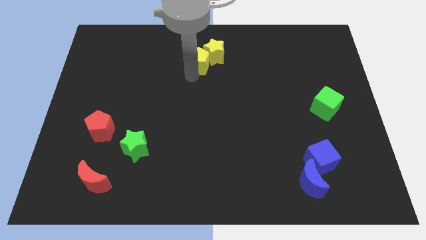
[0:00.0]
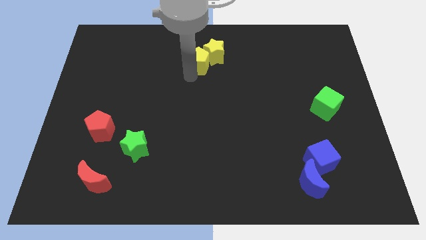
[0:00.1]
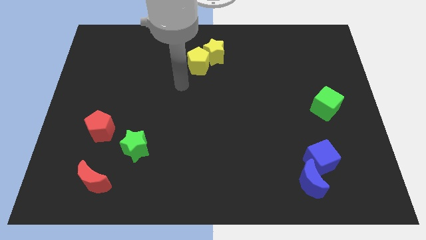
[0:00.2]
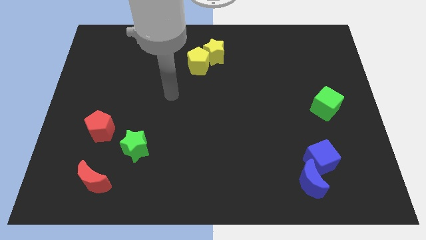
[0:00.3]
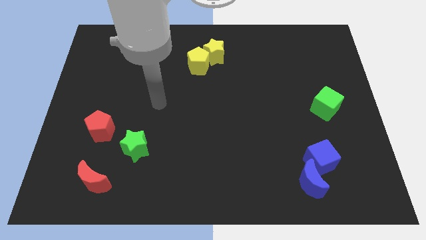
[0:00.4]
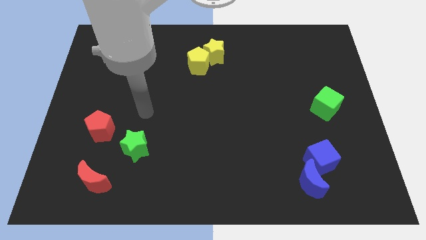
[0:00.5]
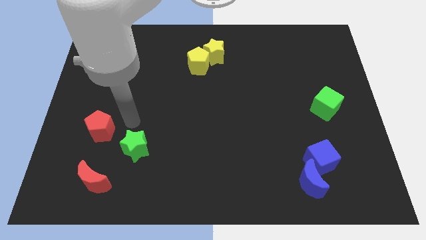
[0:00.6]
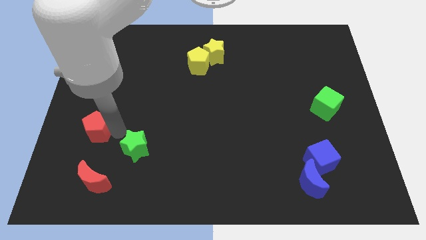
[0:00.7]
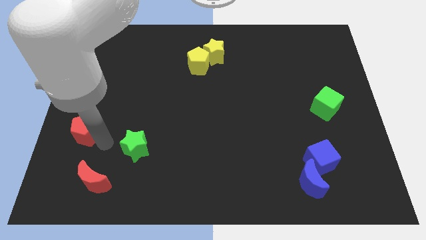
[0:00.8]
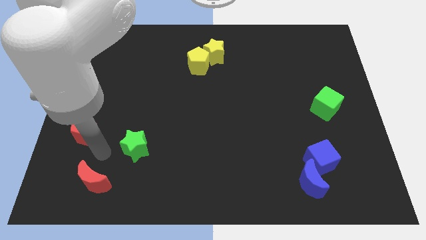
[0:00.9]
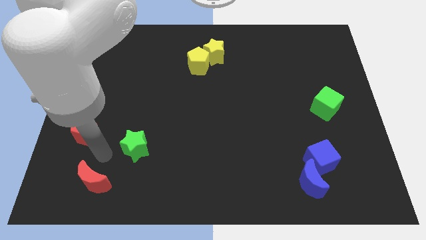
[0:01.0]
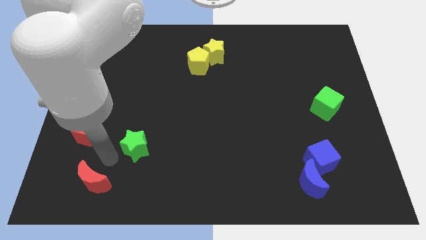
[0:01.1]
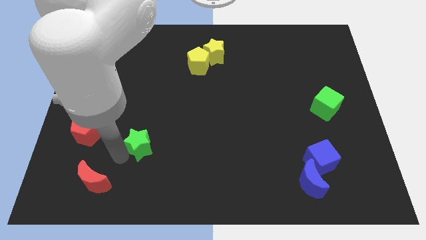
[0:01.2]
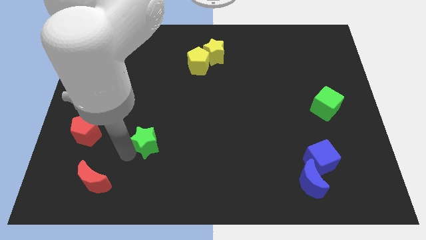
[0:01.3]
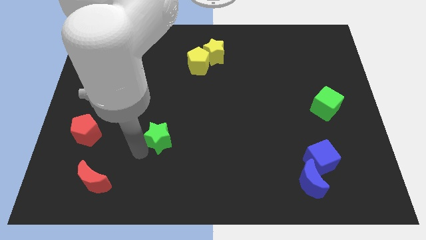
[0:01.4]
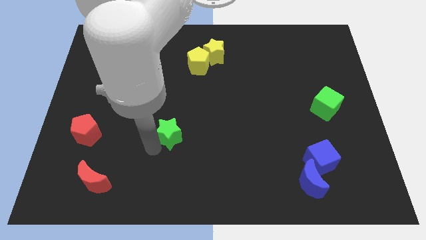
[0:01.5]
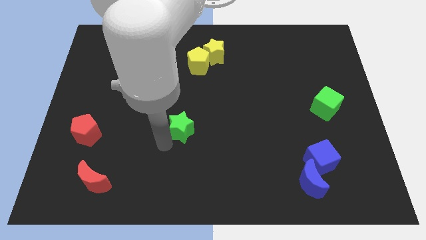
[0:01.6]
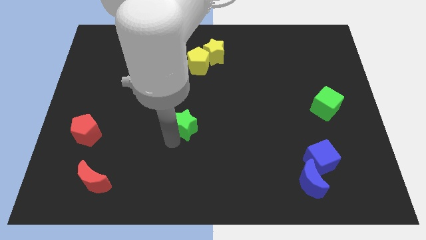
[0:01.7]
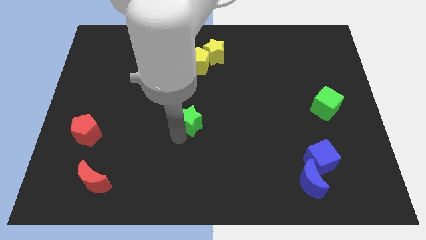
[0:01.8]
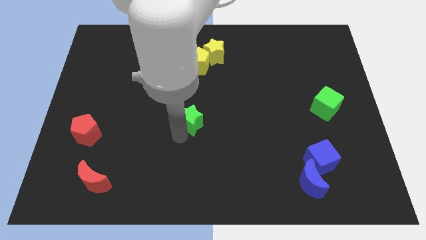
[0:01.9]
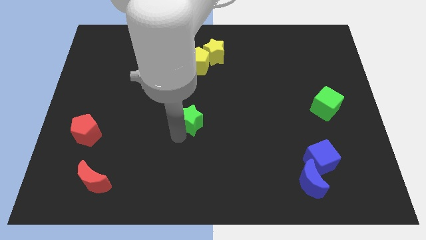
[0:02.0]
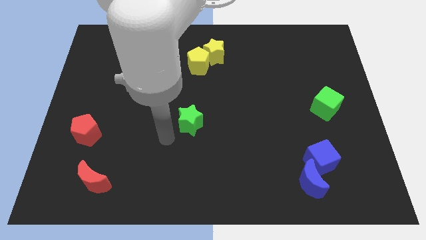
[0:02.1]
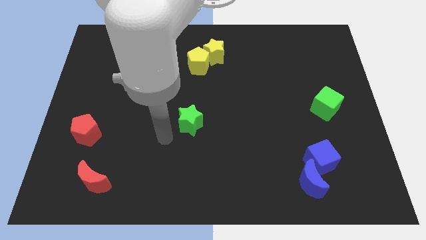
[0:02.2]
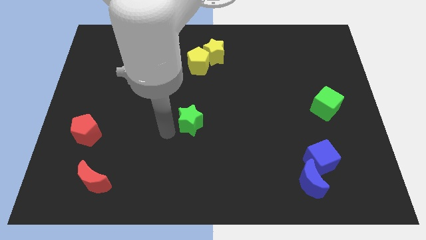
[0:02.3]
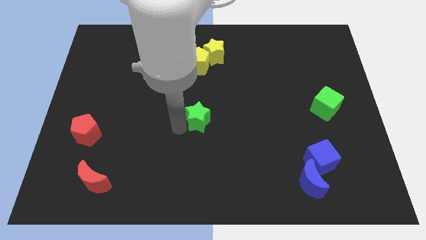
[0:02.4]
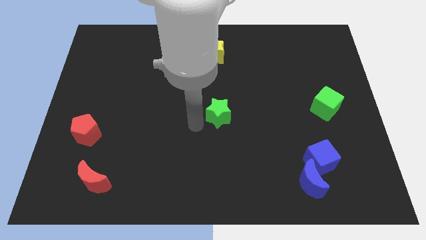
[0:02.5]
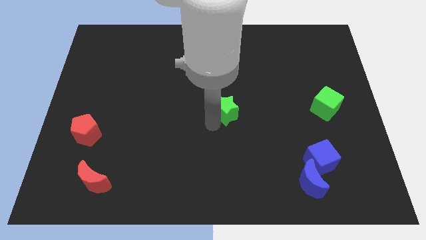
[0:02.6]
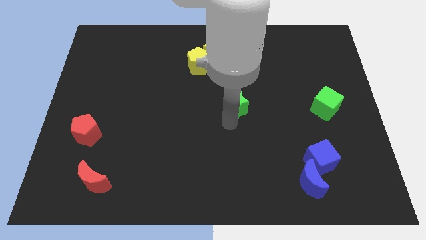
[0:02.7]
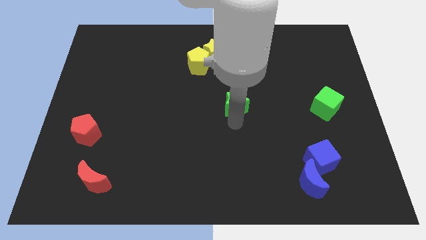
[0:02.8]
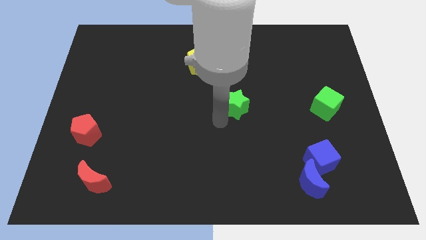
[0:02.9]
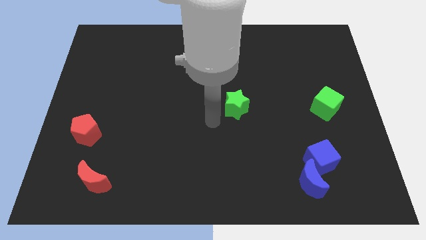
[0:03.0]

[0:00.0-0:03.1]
push the green star horizontally to the left side of the green cube

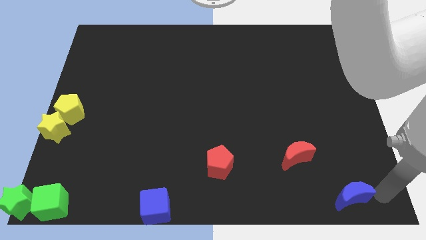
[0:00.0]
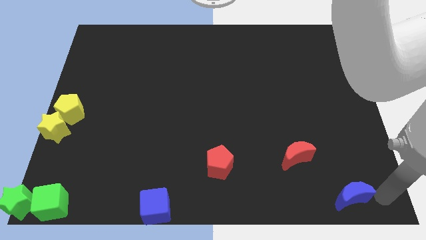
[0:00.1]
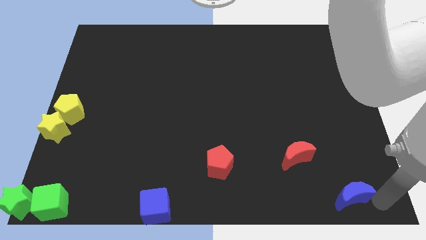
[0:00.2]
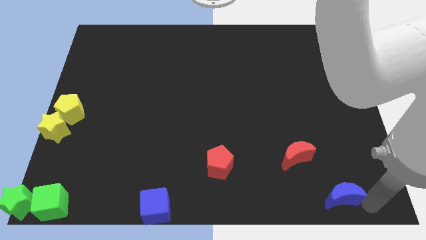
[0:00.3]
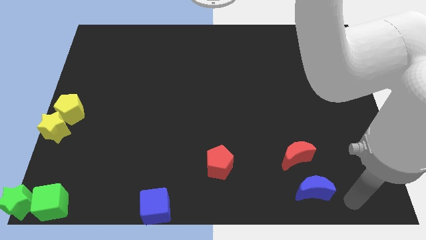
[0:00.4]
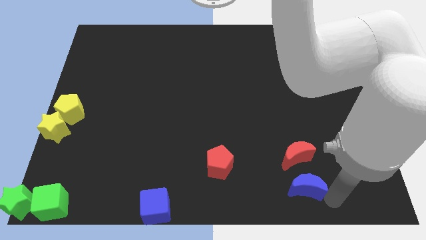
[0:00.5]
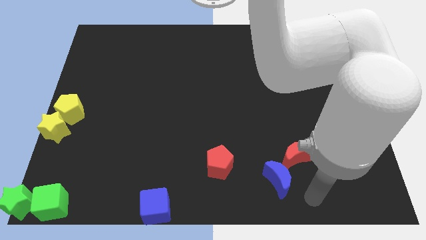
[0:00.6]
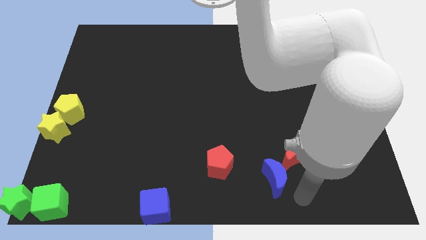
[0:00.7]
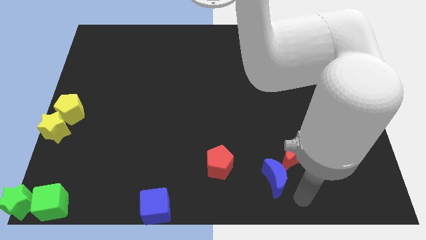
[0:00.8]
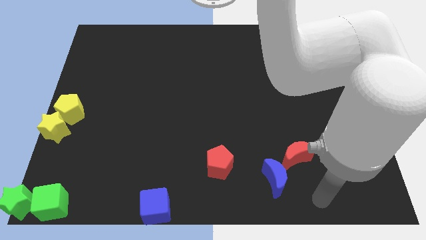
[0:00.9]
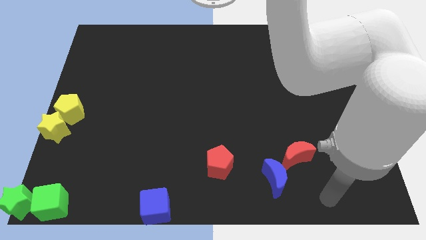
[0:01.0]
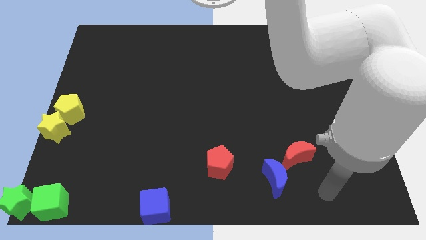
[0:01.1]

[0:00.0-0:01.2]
place the blue crescent at the bottom left of the red crescent

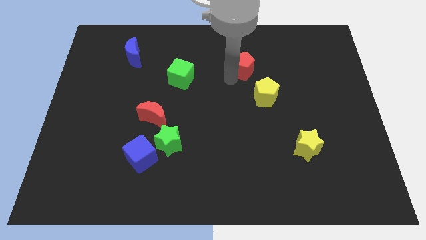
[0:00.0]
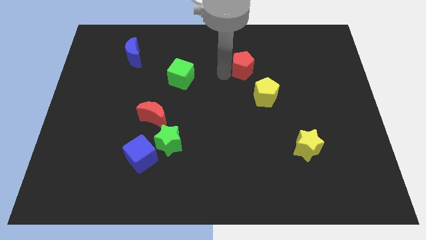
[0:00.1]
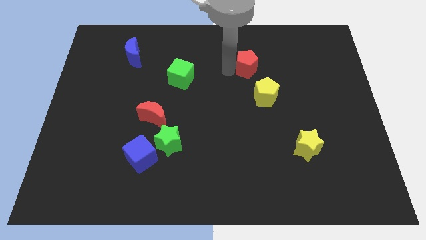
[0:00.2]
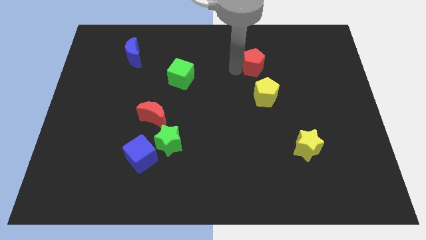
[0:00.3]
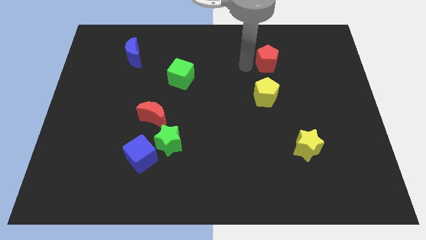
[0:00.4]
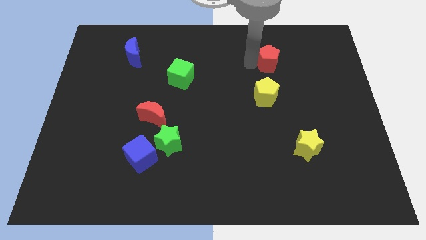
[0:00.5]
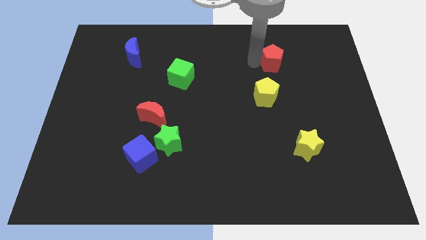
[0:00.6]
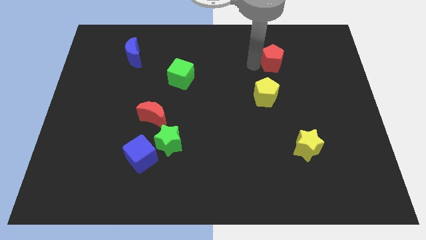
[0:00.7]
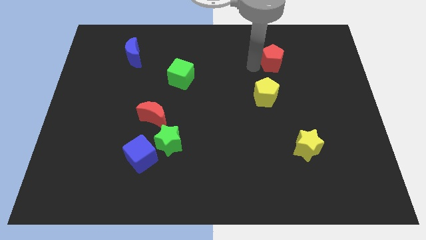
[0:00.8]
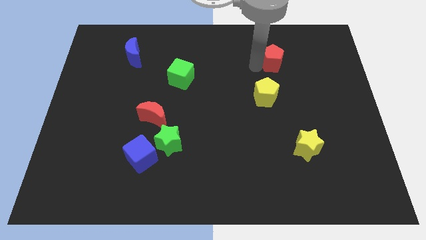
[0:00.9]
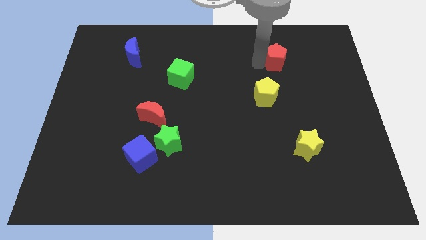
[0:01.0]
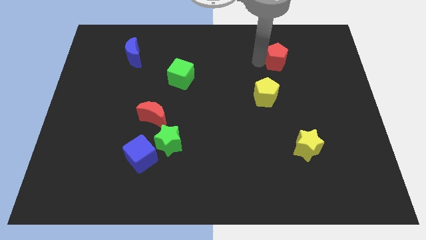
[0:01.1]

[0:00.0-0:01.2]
place the red pentagon above the yellow pentagon

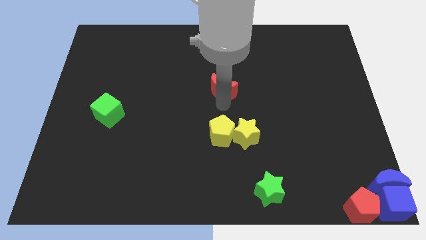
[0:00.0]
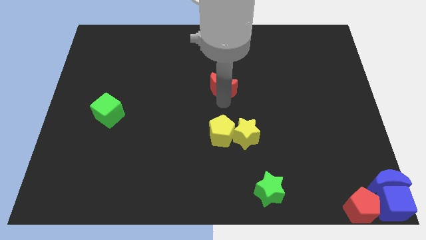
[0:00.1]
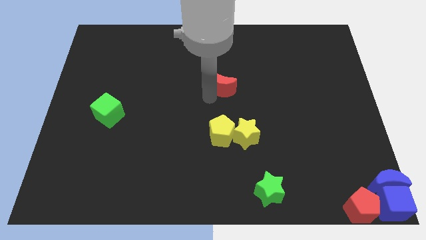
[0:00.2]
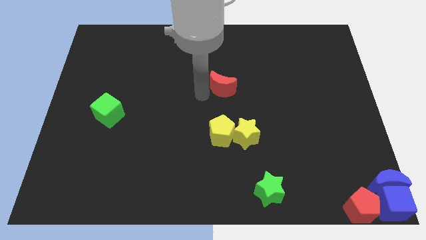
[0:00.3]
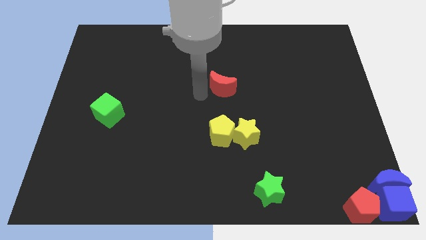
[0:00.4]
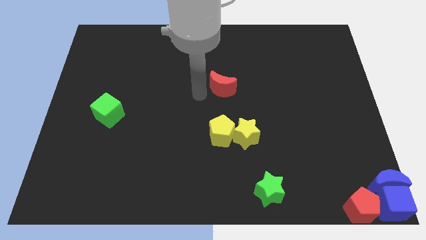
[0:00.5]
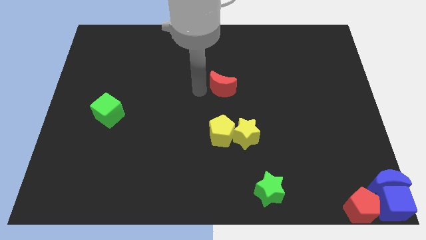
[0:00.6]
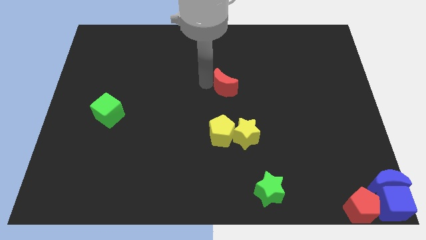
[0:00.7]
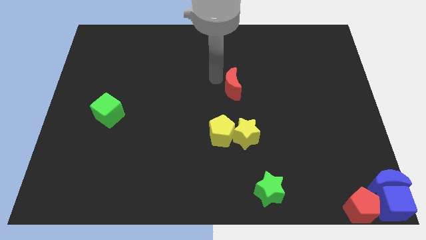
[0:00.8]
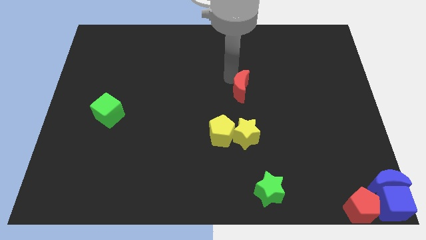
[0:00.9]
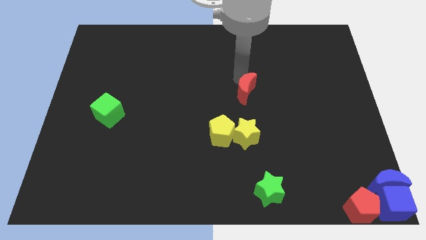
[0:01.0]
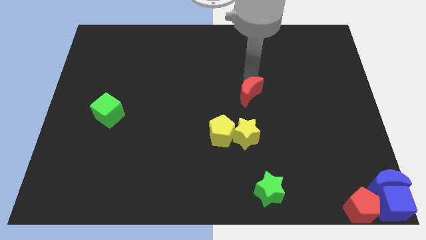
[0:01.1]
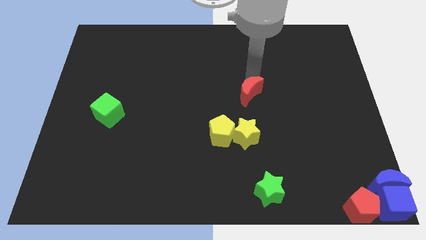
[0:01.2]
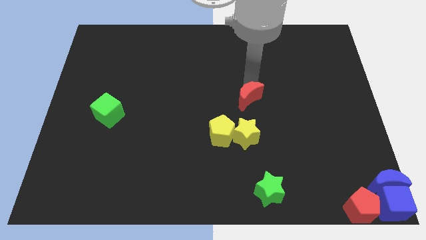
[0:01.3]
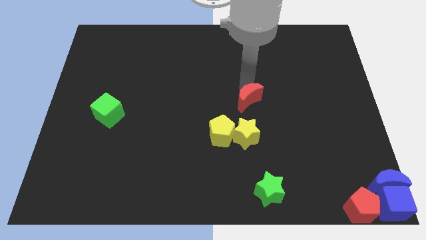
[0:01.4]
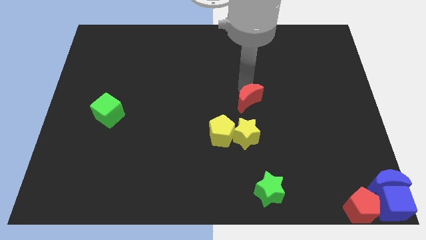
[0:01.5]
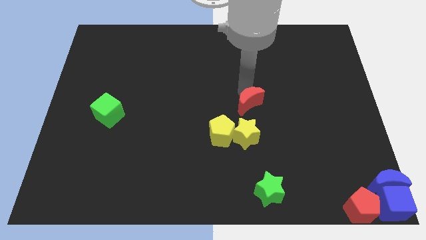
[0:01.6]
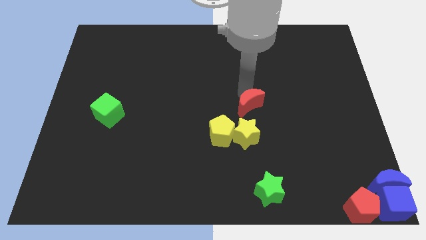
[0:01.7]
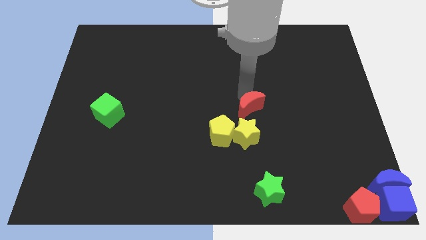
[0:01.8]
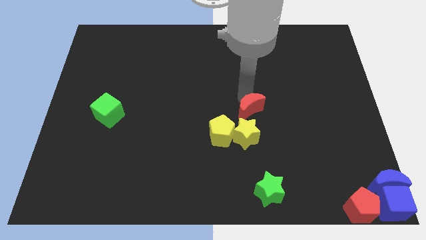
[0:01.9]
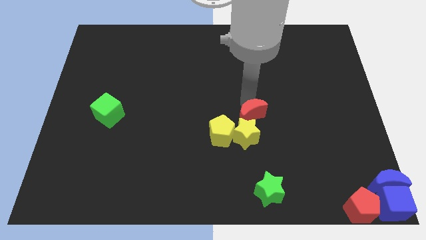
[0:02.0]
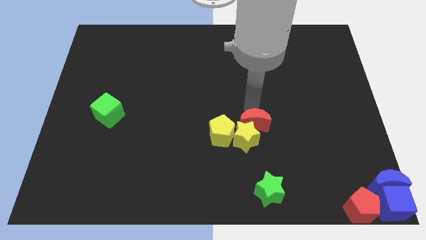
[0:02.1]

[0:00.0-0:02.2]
move red moon to the top of the yellow star

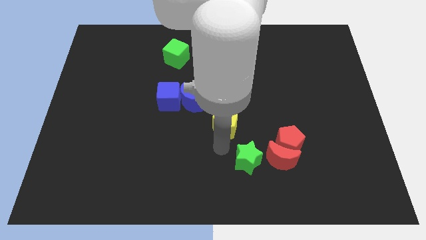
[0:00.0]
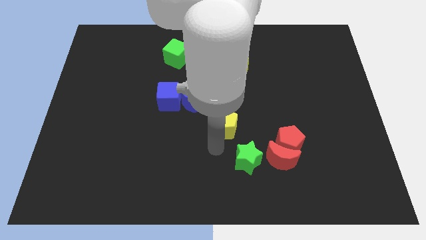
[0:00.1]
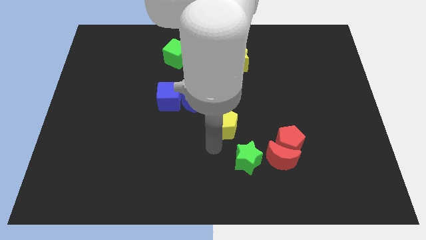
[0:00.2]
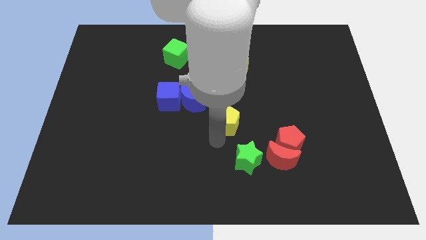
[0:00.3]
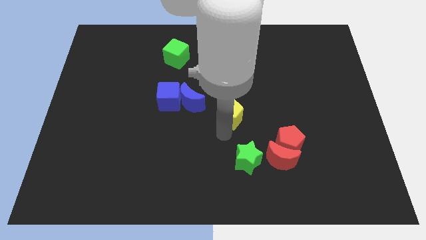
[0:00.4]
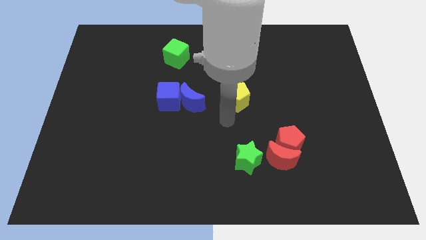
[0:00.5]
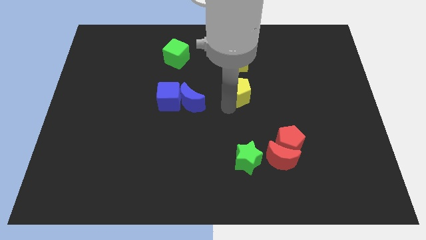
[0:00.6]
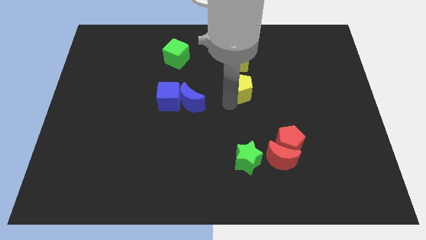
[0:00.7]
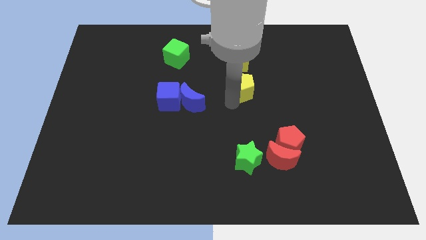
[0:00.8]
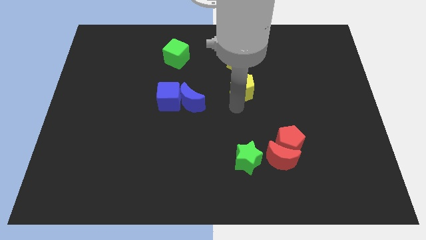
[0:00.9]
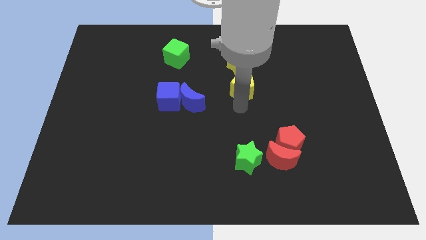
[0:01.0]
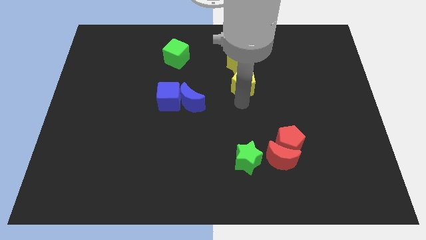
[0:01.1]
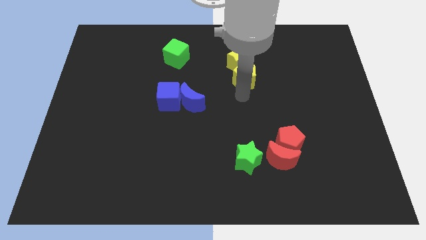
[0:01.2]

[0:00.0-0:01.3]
move yellow pentagon below yellow star
